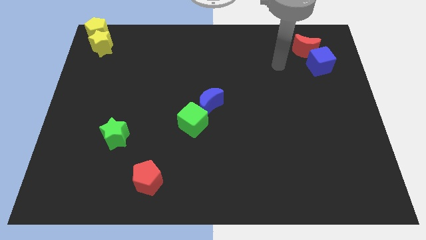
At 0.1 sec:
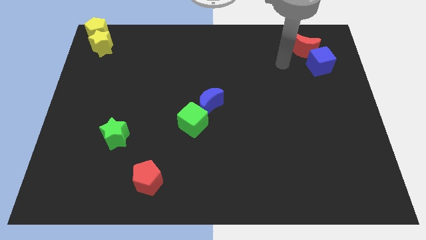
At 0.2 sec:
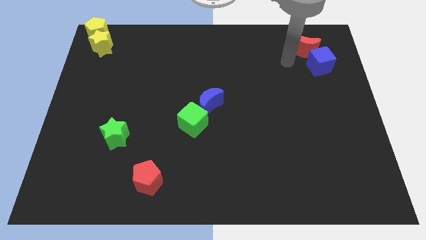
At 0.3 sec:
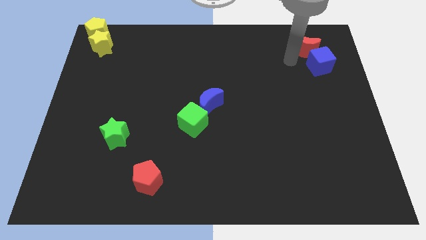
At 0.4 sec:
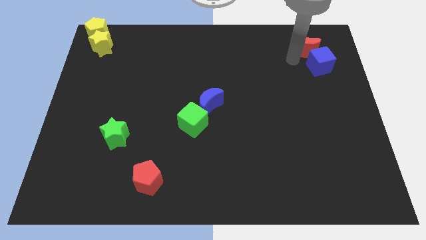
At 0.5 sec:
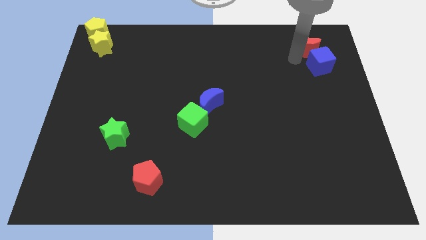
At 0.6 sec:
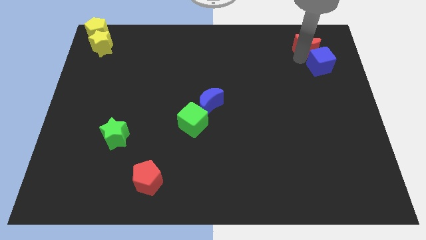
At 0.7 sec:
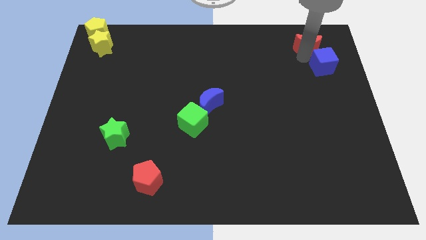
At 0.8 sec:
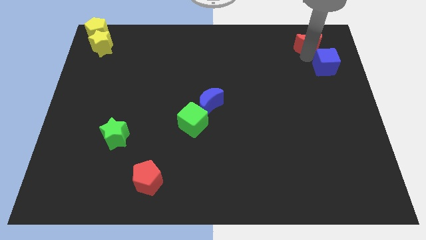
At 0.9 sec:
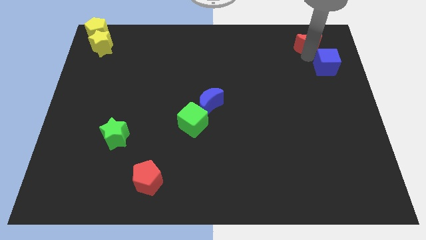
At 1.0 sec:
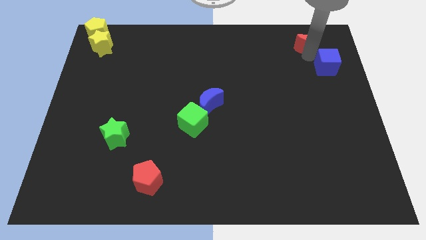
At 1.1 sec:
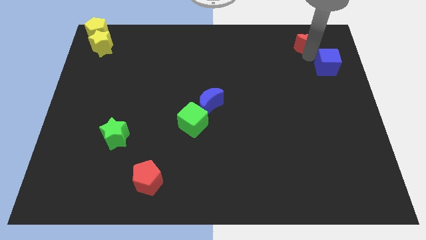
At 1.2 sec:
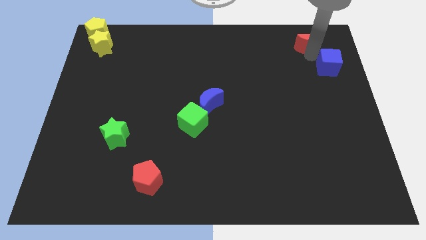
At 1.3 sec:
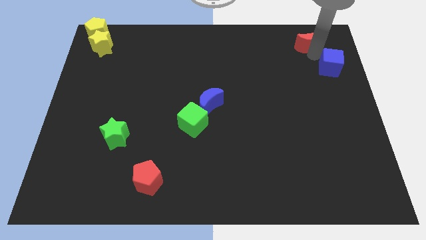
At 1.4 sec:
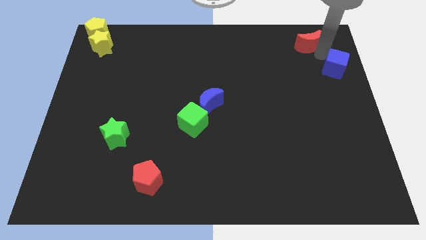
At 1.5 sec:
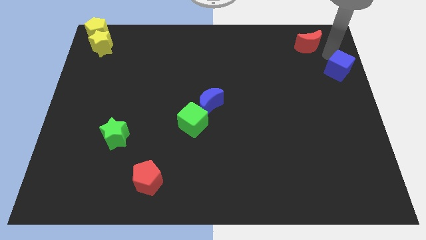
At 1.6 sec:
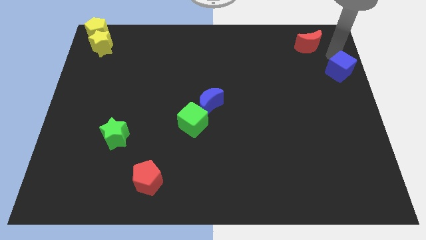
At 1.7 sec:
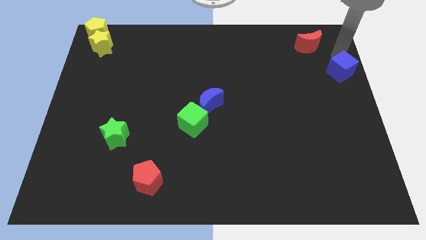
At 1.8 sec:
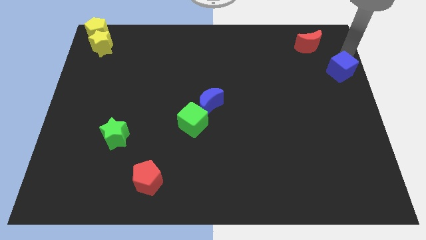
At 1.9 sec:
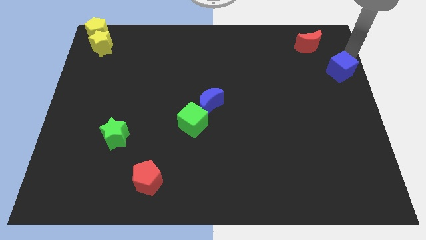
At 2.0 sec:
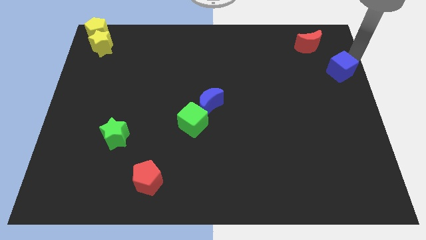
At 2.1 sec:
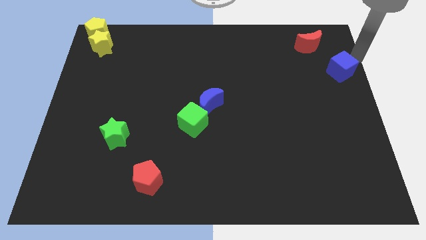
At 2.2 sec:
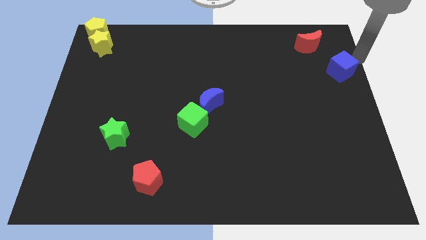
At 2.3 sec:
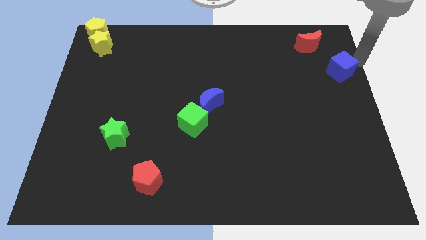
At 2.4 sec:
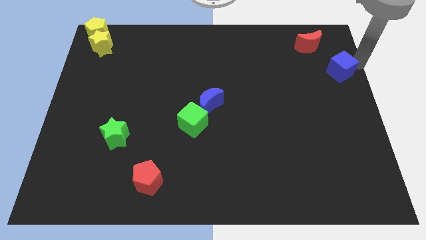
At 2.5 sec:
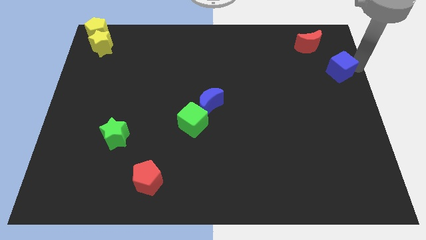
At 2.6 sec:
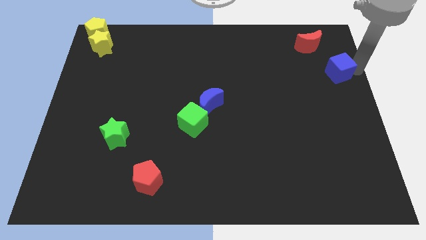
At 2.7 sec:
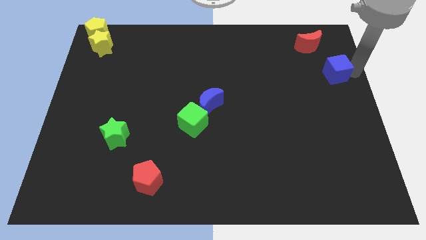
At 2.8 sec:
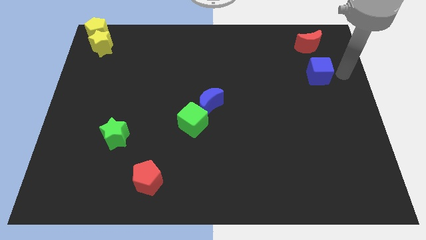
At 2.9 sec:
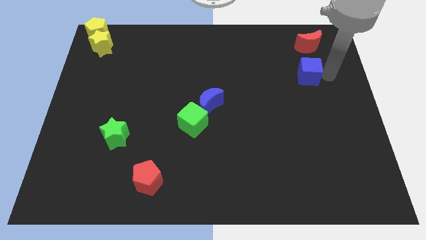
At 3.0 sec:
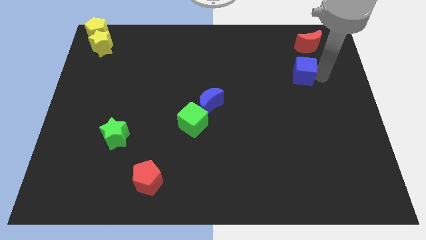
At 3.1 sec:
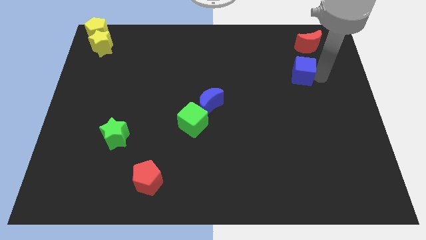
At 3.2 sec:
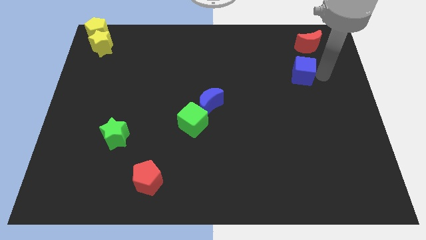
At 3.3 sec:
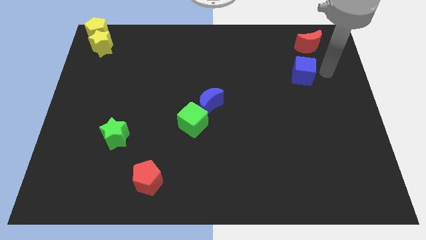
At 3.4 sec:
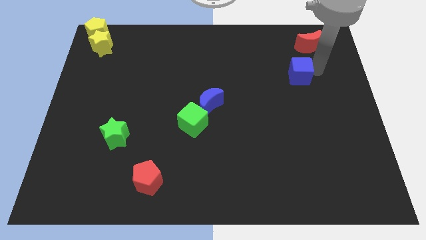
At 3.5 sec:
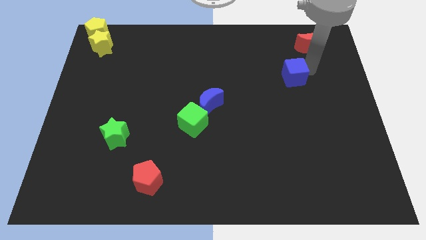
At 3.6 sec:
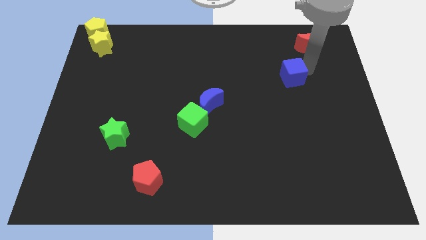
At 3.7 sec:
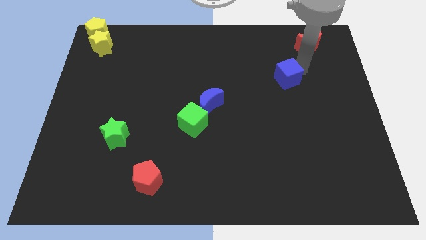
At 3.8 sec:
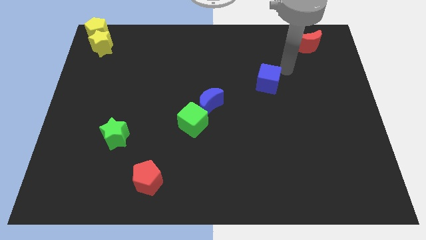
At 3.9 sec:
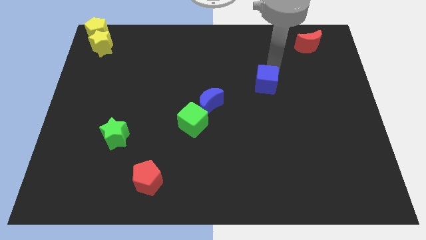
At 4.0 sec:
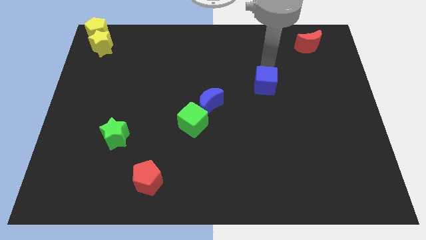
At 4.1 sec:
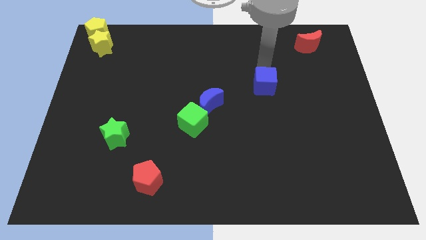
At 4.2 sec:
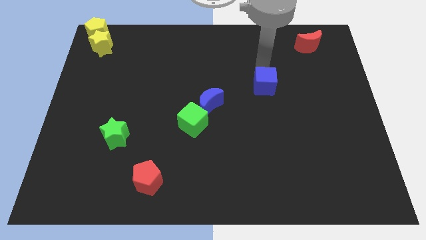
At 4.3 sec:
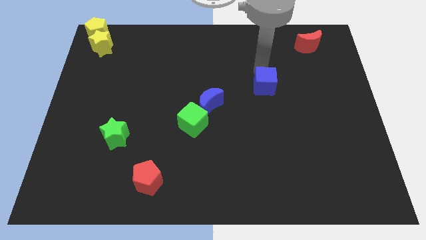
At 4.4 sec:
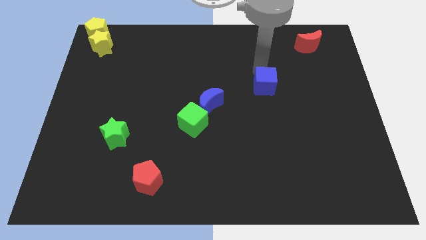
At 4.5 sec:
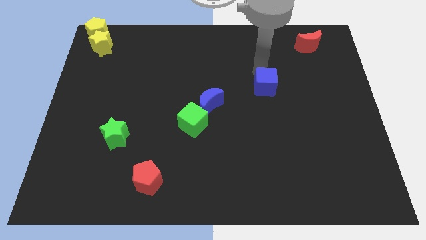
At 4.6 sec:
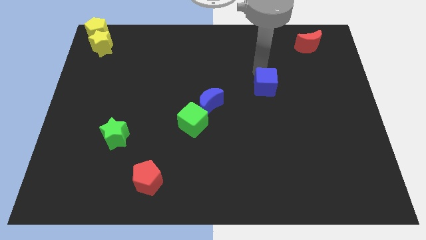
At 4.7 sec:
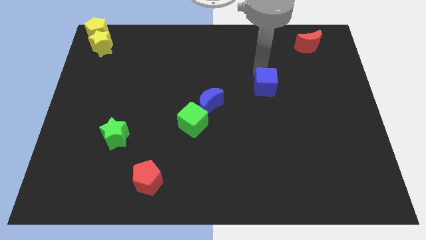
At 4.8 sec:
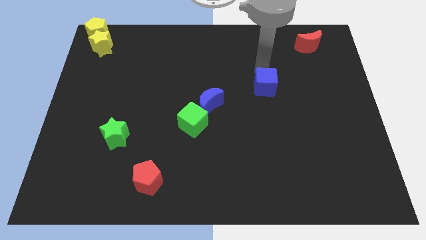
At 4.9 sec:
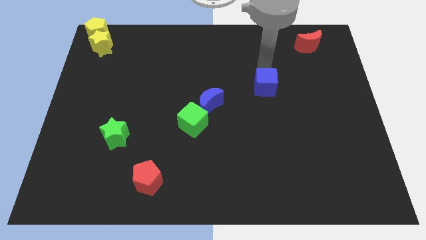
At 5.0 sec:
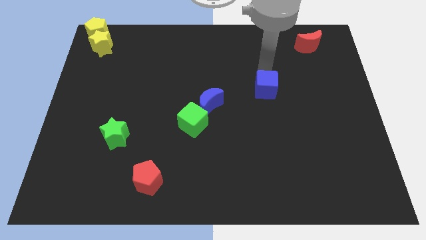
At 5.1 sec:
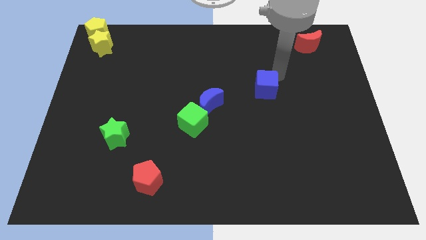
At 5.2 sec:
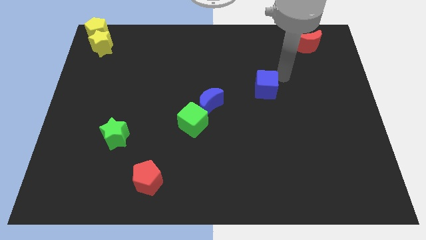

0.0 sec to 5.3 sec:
move blue cube slightly down

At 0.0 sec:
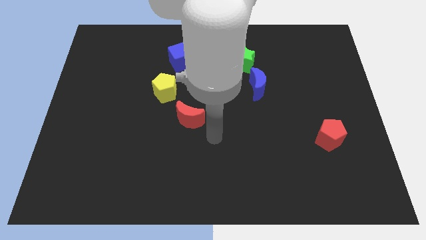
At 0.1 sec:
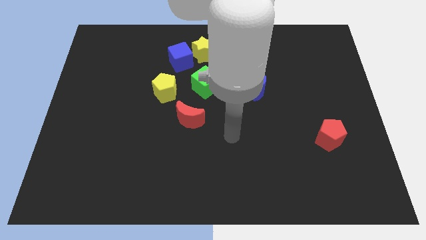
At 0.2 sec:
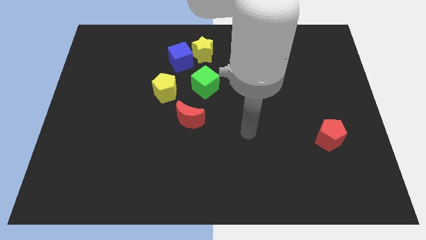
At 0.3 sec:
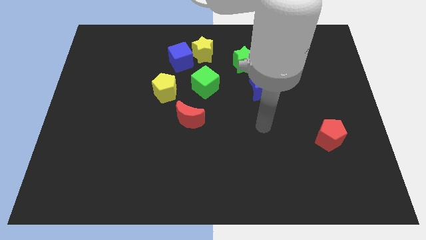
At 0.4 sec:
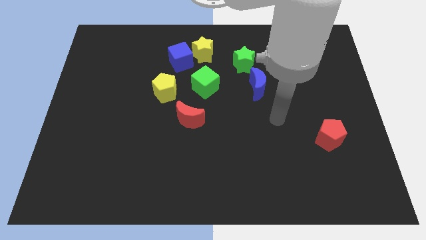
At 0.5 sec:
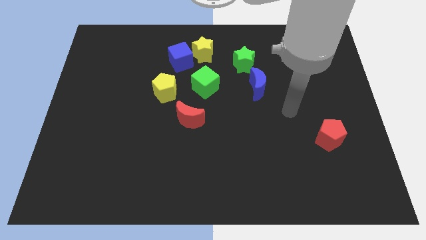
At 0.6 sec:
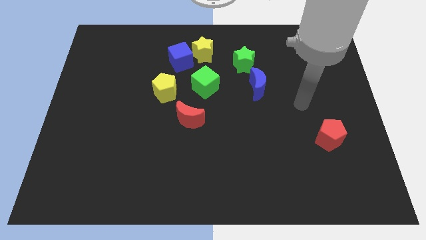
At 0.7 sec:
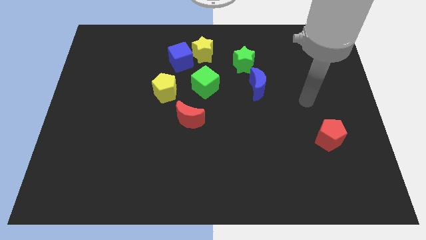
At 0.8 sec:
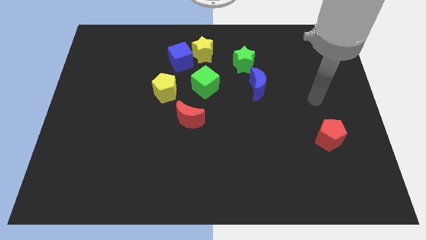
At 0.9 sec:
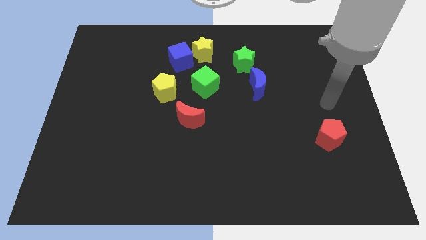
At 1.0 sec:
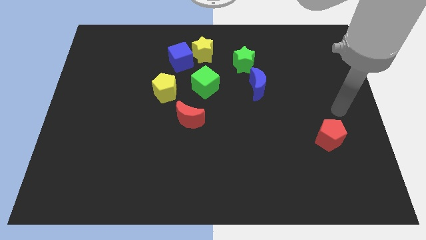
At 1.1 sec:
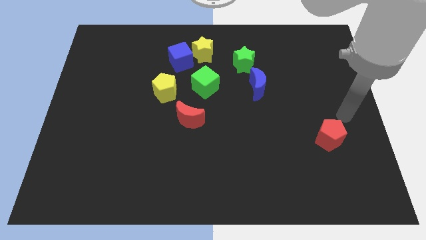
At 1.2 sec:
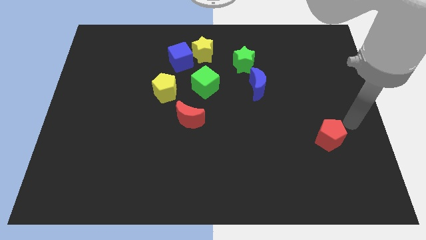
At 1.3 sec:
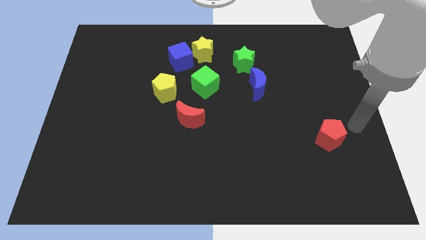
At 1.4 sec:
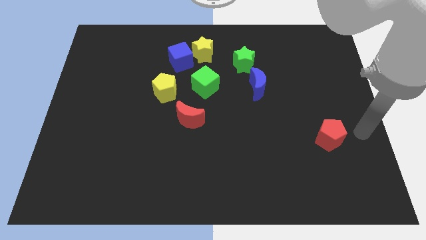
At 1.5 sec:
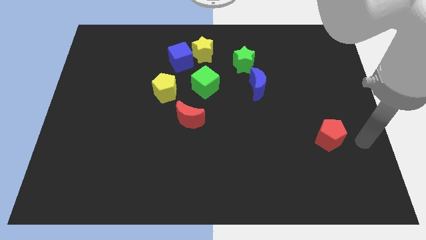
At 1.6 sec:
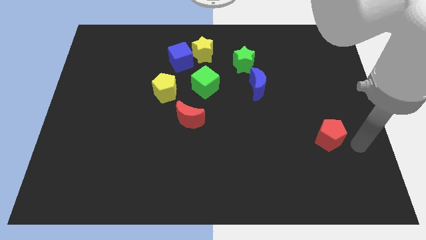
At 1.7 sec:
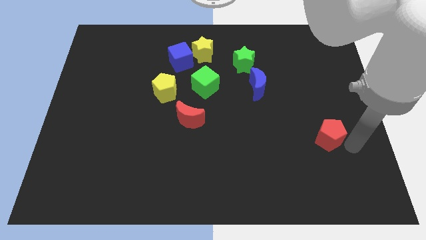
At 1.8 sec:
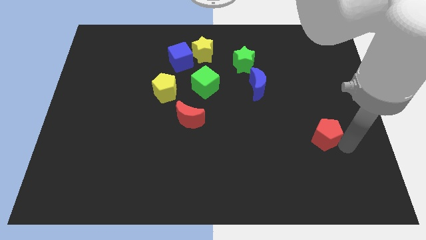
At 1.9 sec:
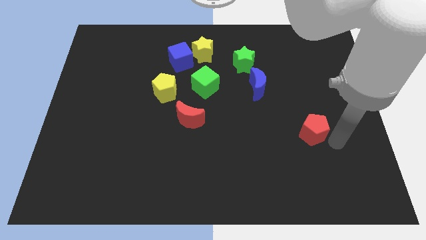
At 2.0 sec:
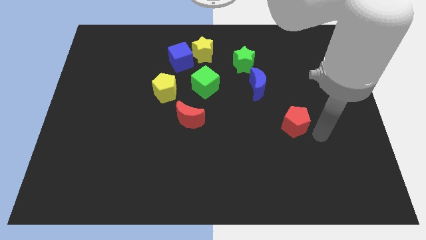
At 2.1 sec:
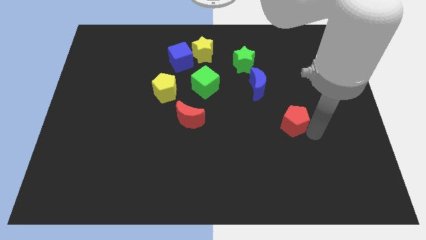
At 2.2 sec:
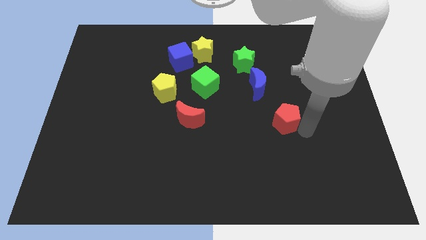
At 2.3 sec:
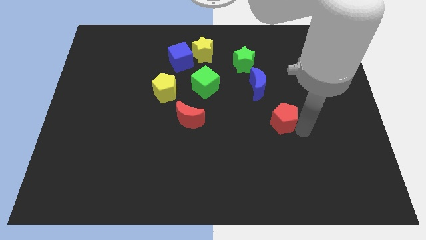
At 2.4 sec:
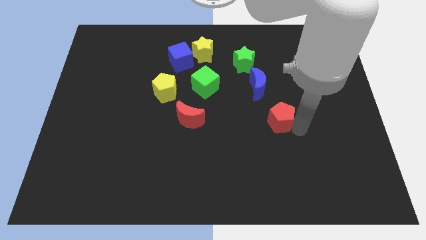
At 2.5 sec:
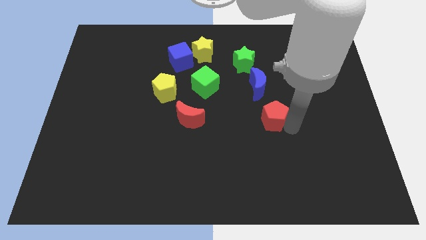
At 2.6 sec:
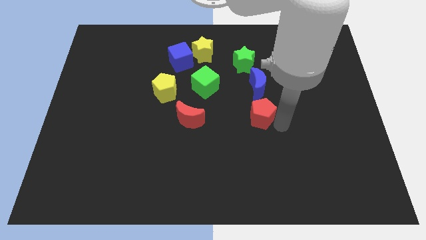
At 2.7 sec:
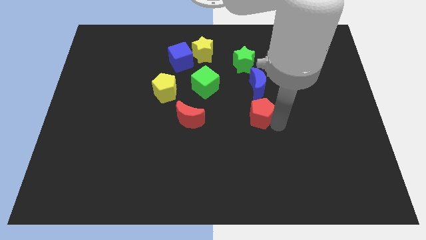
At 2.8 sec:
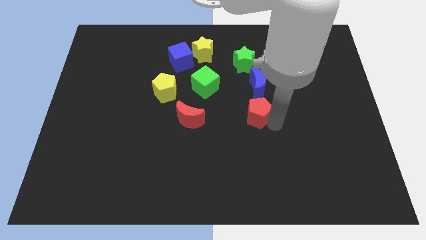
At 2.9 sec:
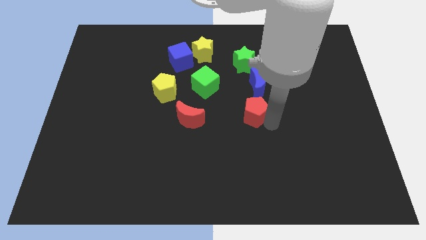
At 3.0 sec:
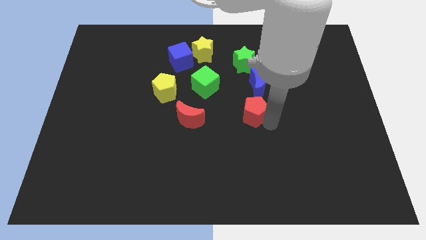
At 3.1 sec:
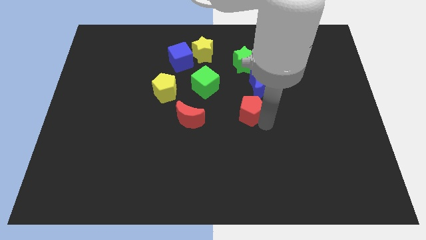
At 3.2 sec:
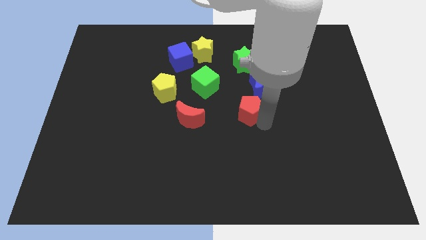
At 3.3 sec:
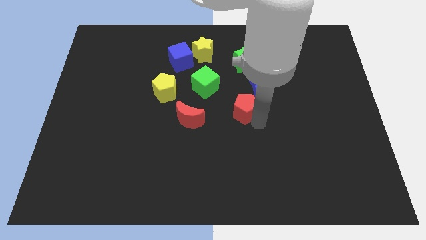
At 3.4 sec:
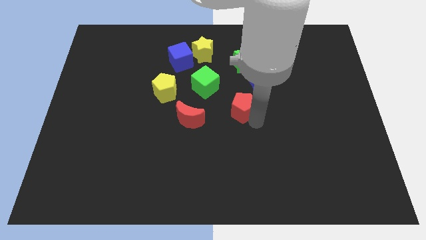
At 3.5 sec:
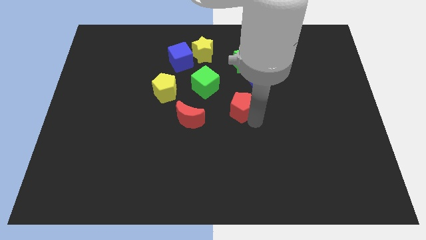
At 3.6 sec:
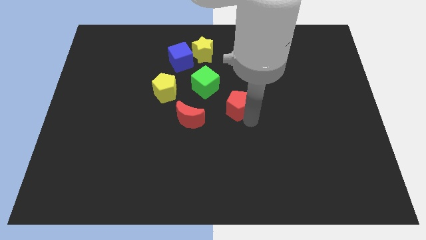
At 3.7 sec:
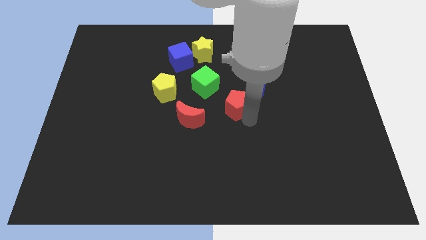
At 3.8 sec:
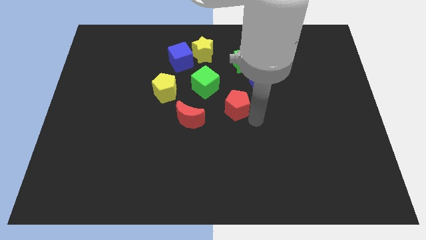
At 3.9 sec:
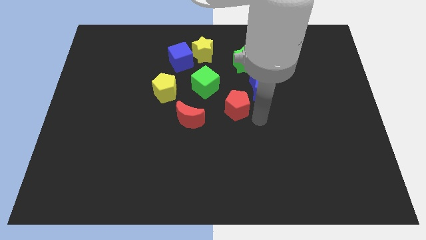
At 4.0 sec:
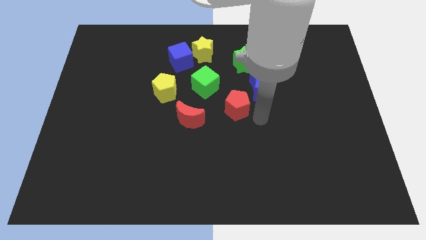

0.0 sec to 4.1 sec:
move the red pentagon to the right of the red crescent
